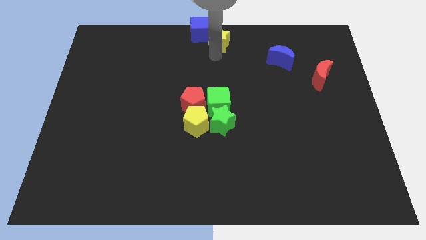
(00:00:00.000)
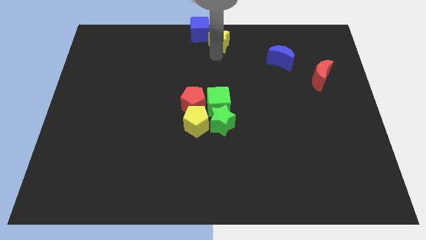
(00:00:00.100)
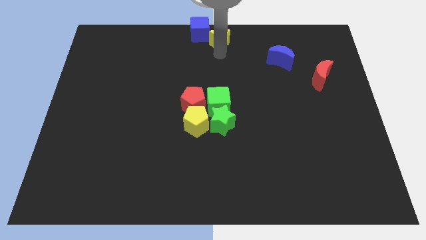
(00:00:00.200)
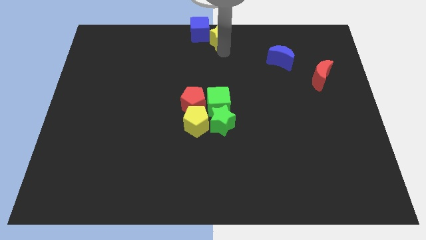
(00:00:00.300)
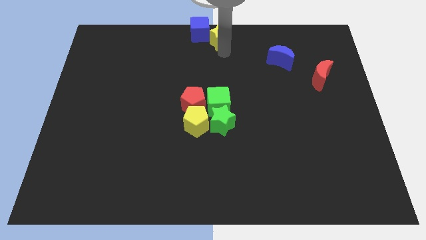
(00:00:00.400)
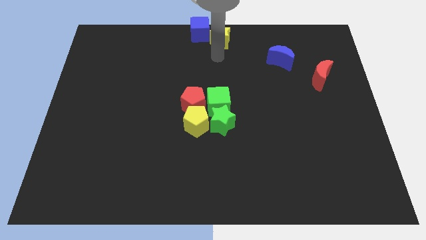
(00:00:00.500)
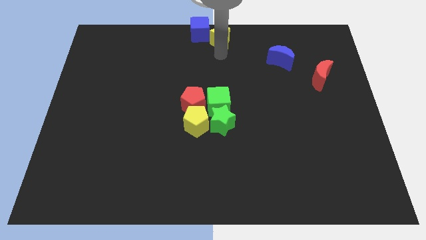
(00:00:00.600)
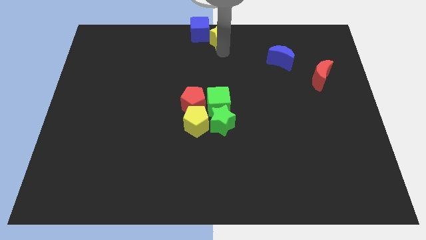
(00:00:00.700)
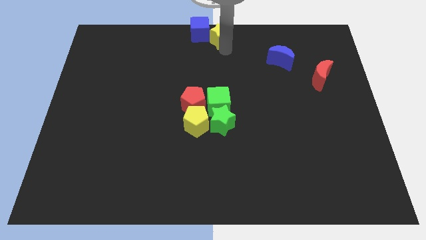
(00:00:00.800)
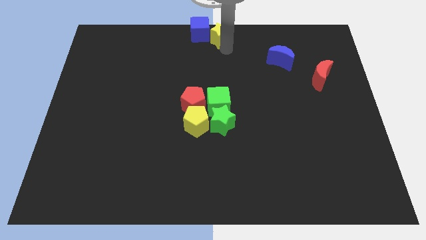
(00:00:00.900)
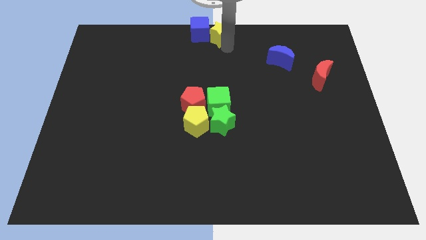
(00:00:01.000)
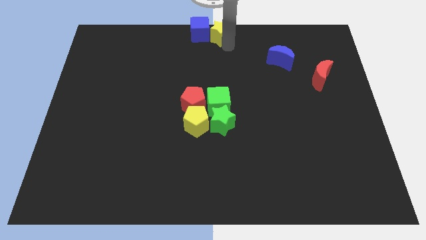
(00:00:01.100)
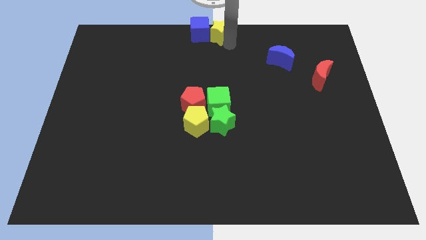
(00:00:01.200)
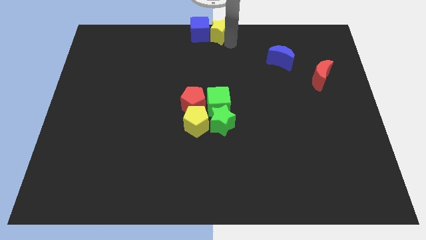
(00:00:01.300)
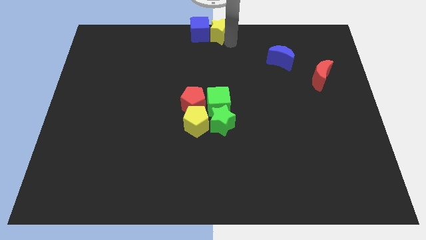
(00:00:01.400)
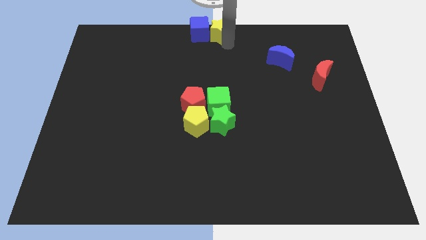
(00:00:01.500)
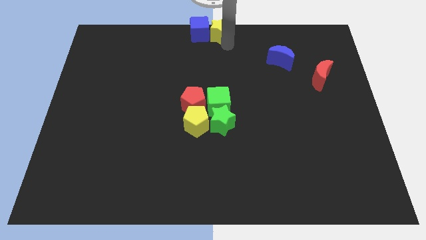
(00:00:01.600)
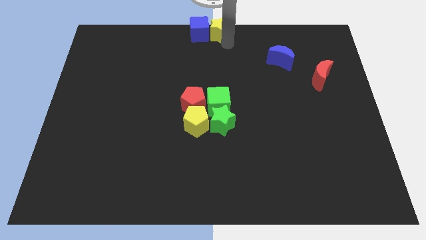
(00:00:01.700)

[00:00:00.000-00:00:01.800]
place the yellow star to the right of the blue cube

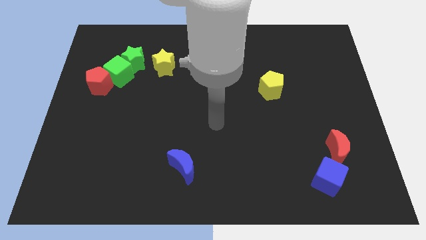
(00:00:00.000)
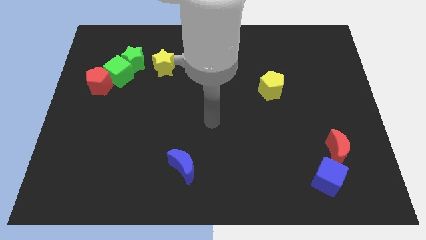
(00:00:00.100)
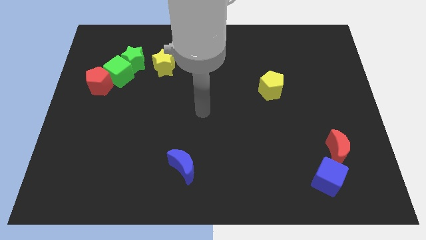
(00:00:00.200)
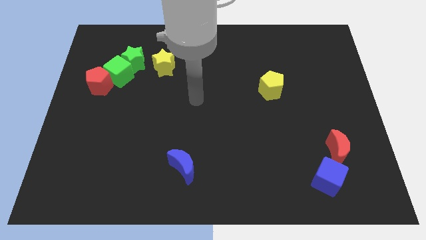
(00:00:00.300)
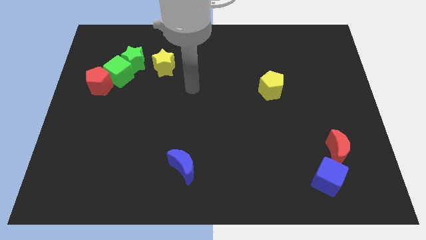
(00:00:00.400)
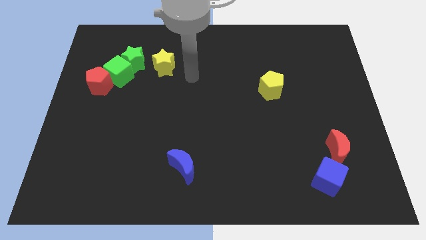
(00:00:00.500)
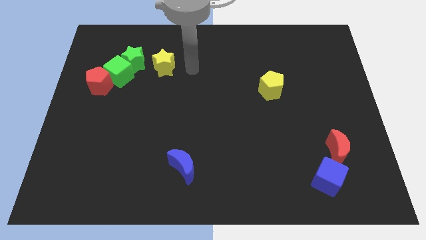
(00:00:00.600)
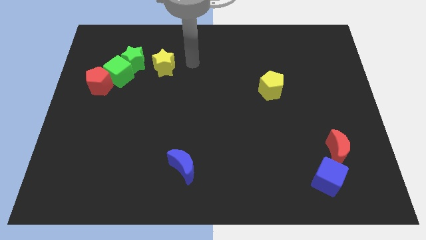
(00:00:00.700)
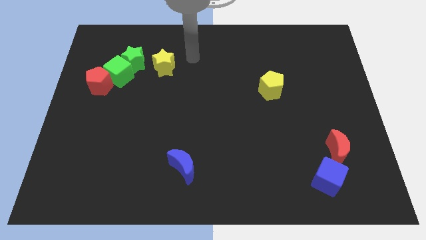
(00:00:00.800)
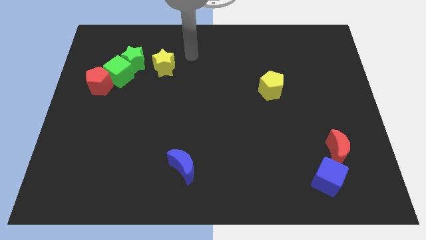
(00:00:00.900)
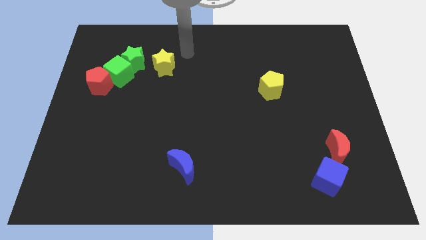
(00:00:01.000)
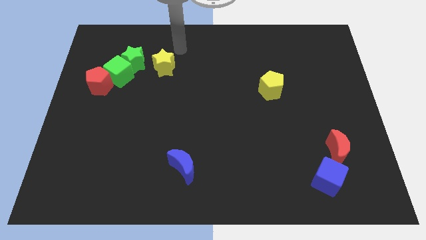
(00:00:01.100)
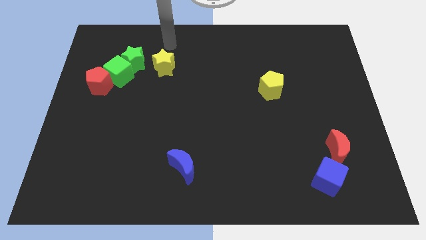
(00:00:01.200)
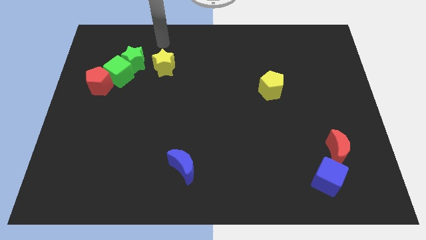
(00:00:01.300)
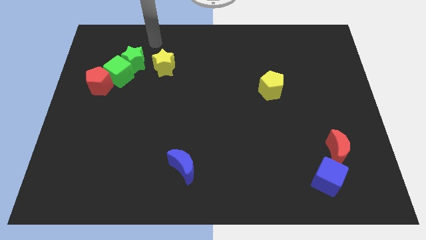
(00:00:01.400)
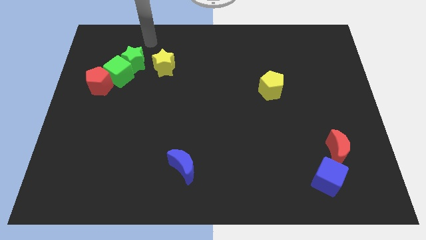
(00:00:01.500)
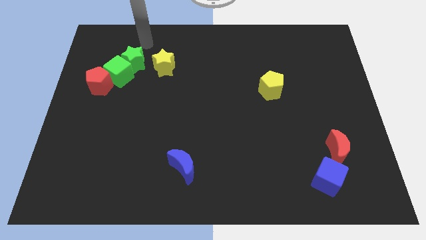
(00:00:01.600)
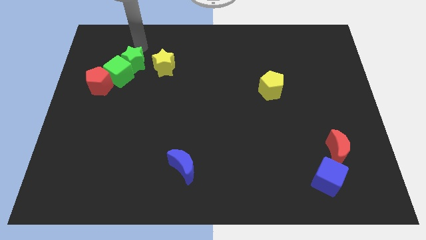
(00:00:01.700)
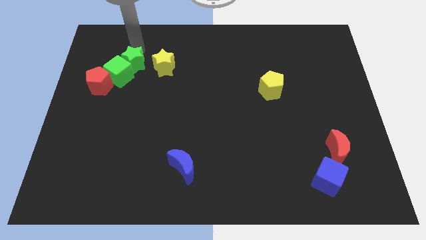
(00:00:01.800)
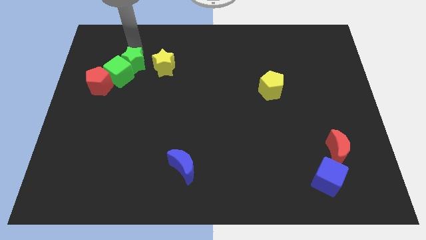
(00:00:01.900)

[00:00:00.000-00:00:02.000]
move your arm towards the green star

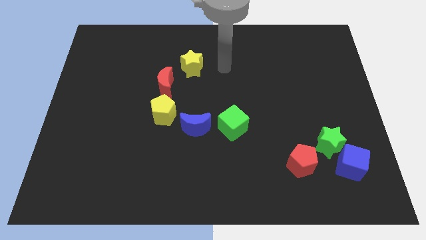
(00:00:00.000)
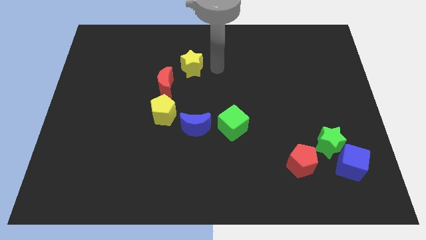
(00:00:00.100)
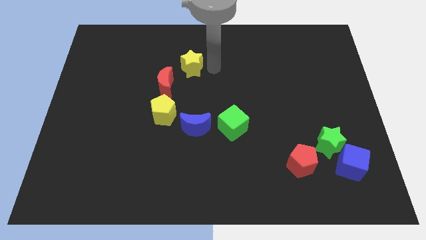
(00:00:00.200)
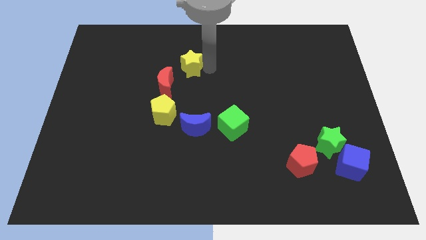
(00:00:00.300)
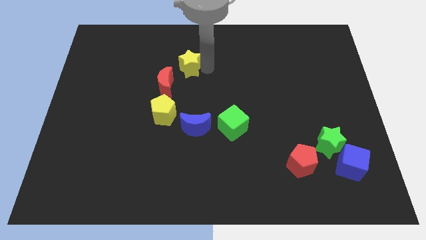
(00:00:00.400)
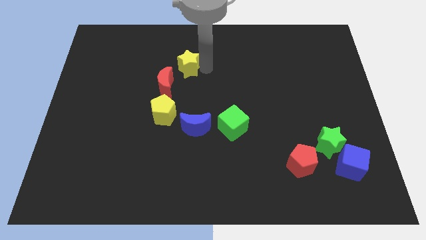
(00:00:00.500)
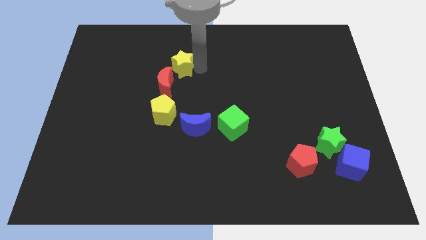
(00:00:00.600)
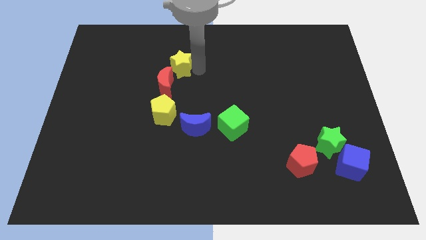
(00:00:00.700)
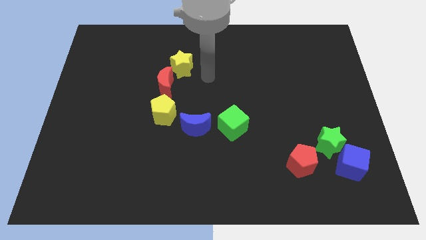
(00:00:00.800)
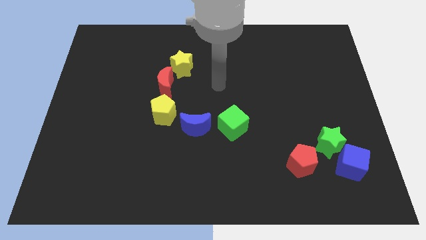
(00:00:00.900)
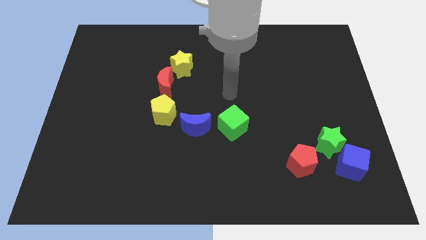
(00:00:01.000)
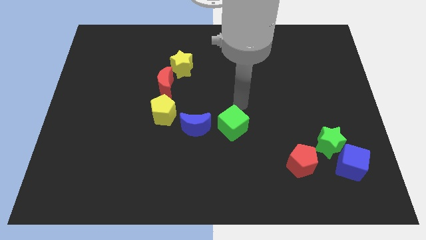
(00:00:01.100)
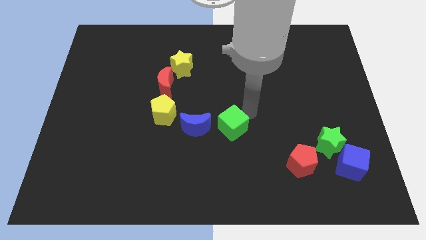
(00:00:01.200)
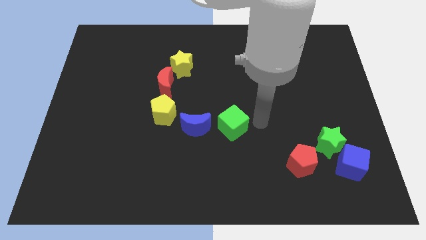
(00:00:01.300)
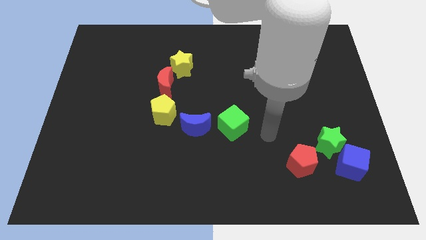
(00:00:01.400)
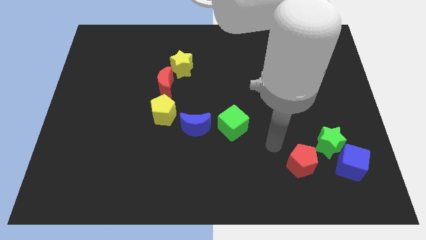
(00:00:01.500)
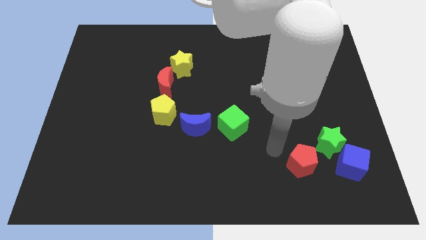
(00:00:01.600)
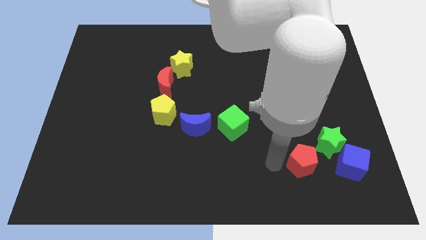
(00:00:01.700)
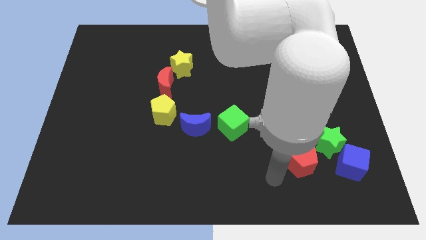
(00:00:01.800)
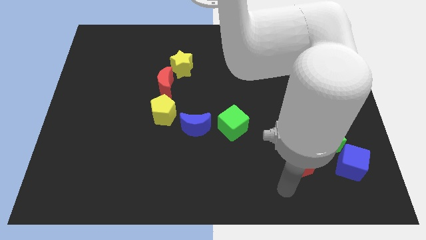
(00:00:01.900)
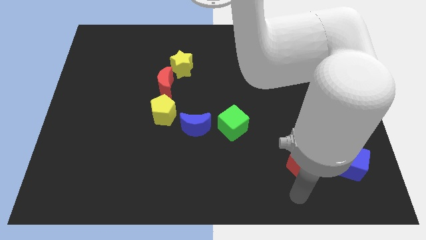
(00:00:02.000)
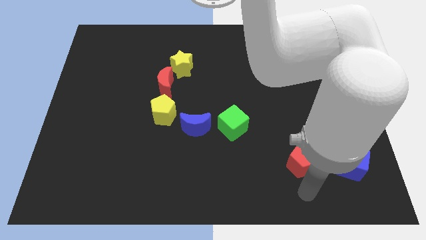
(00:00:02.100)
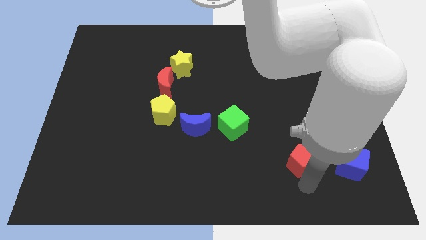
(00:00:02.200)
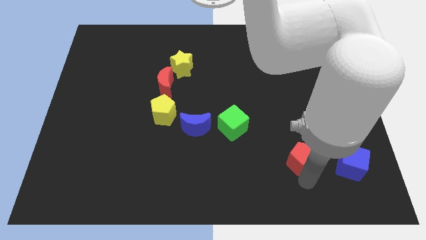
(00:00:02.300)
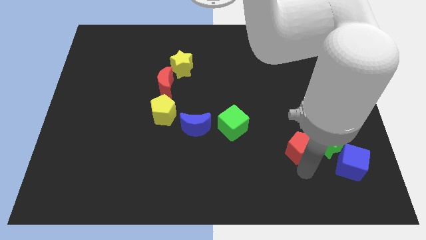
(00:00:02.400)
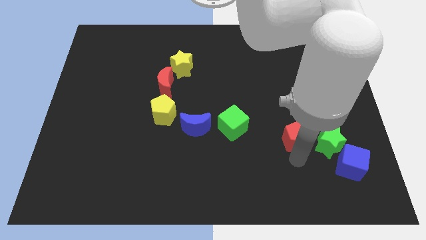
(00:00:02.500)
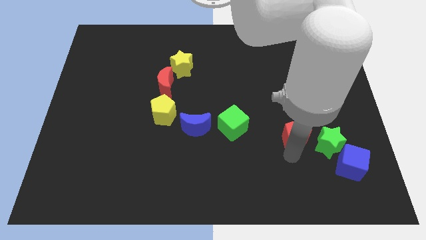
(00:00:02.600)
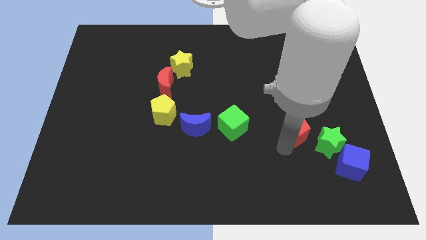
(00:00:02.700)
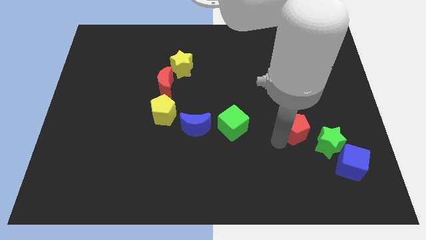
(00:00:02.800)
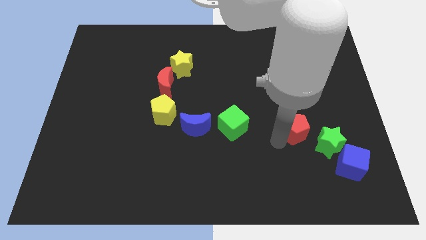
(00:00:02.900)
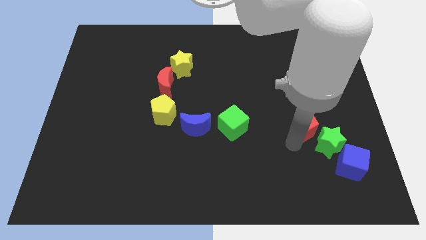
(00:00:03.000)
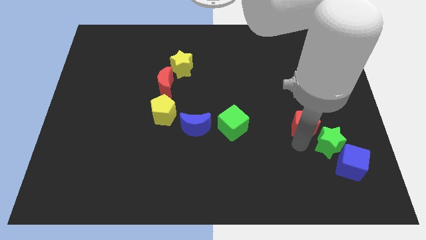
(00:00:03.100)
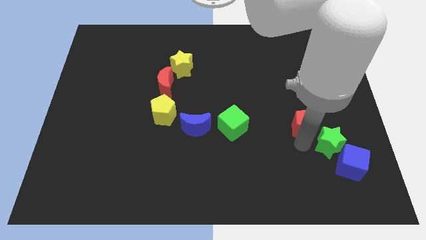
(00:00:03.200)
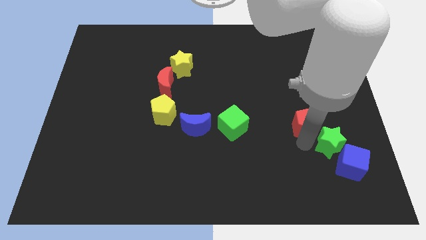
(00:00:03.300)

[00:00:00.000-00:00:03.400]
go near red pentagon

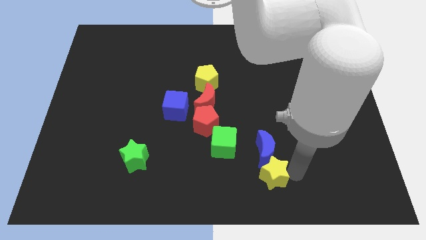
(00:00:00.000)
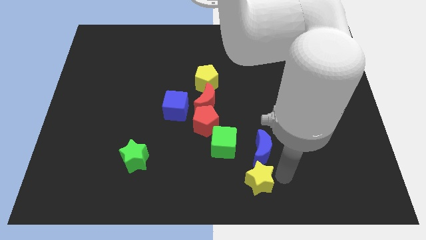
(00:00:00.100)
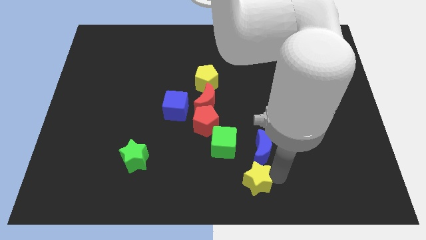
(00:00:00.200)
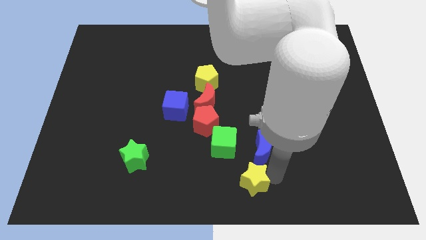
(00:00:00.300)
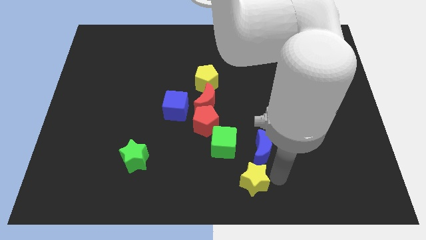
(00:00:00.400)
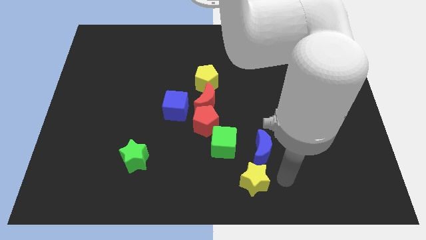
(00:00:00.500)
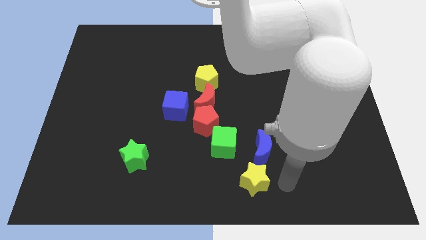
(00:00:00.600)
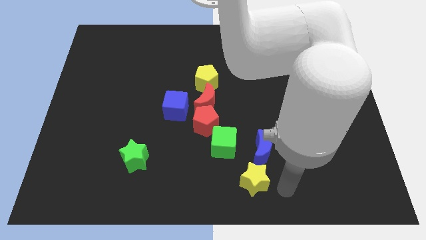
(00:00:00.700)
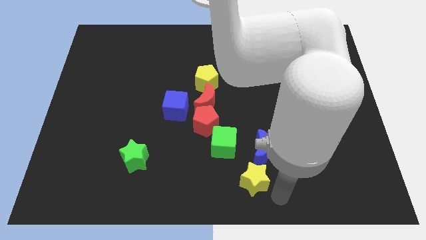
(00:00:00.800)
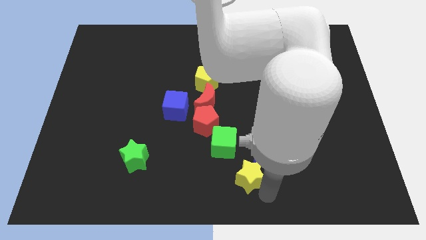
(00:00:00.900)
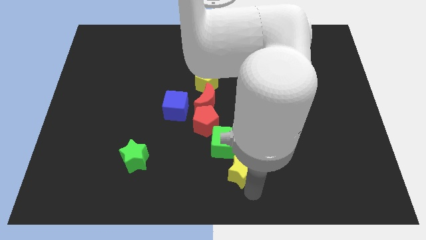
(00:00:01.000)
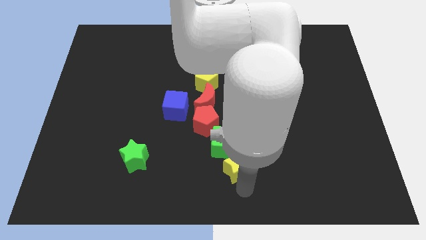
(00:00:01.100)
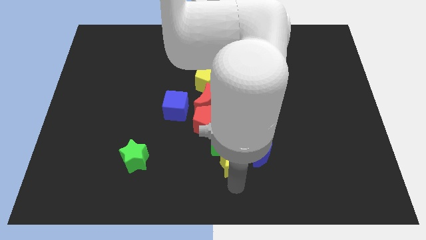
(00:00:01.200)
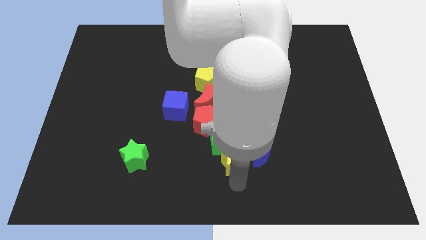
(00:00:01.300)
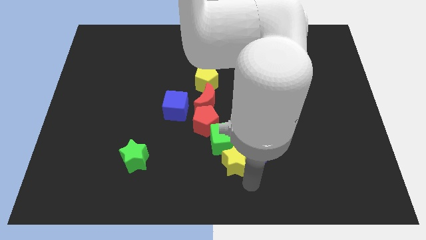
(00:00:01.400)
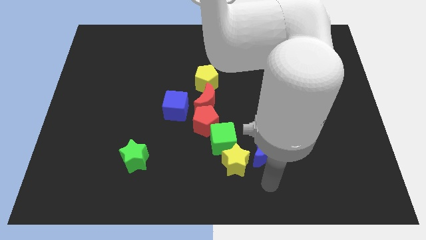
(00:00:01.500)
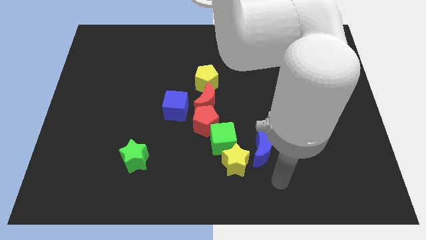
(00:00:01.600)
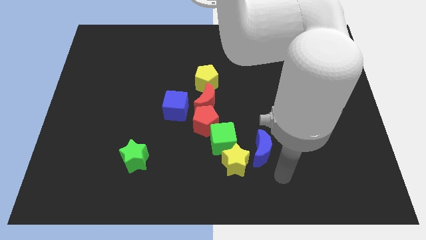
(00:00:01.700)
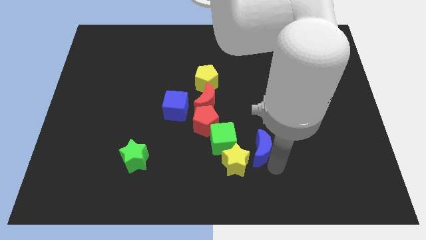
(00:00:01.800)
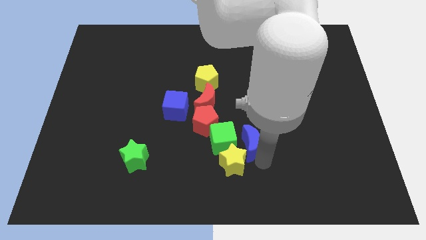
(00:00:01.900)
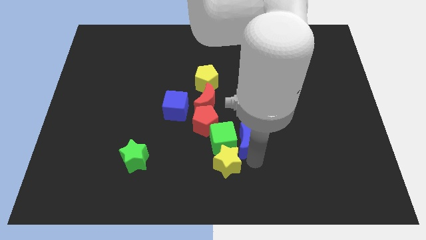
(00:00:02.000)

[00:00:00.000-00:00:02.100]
slide yellow star into green cube
